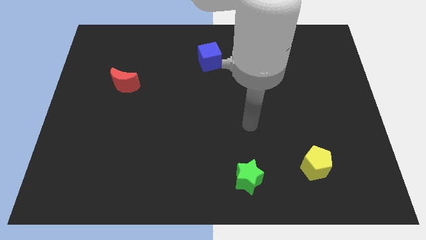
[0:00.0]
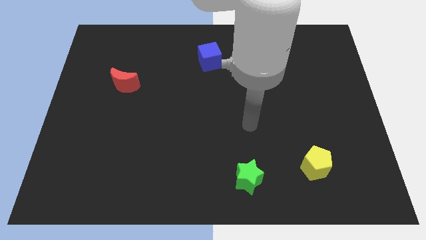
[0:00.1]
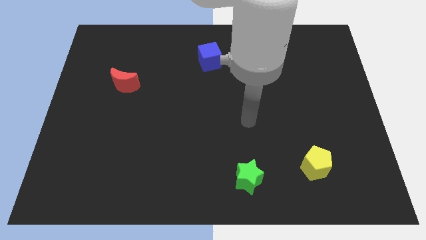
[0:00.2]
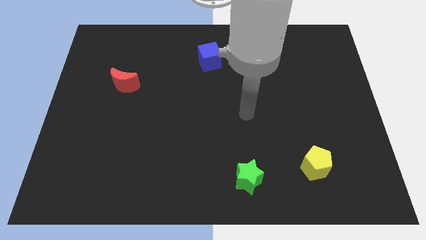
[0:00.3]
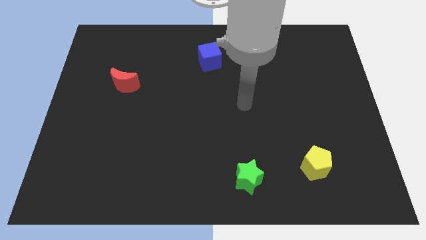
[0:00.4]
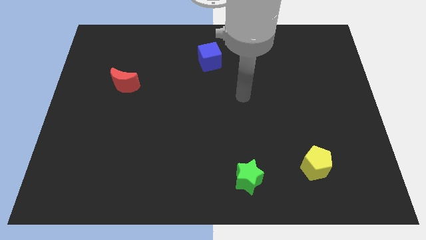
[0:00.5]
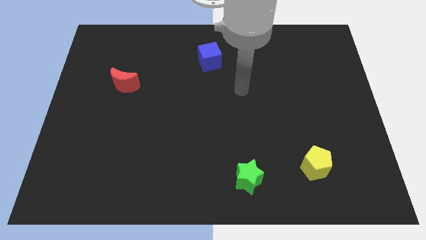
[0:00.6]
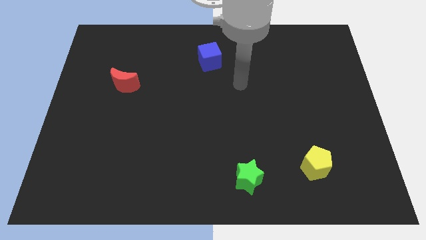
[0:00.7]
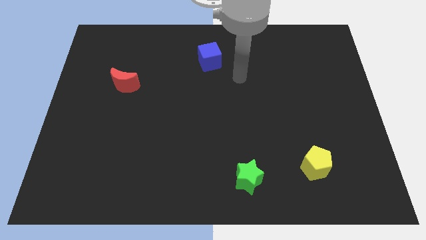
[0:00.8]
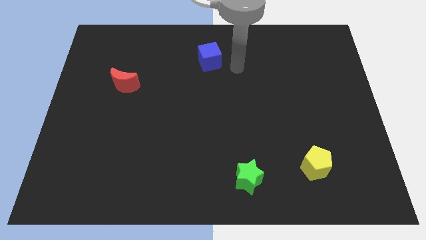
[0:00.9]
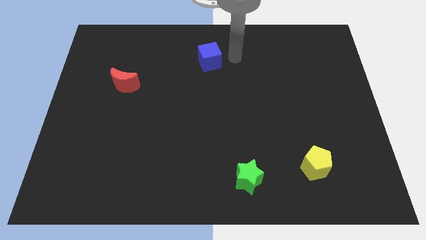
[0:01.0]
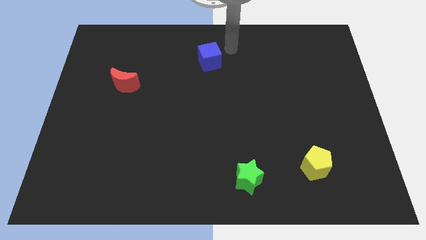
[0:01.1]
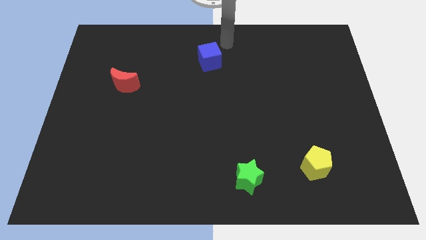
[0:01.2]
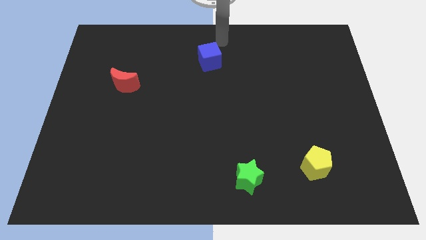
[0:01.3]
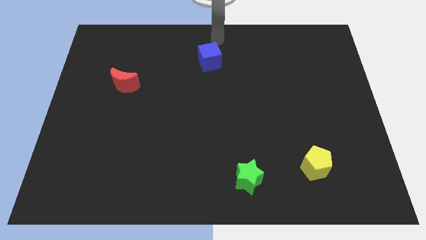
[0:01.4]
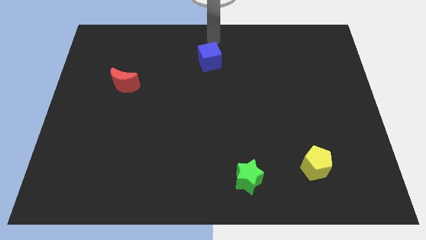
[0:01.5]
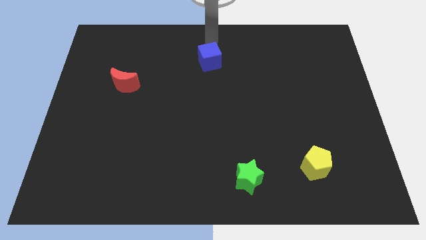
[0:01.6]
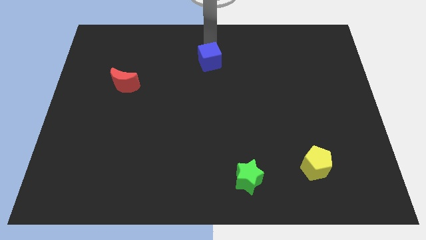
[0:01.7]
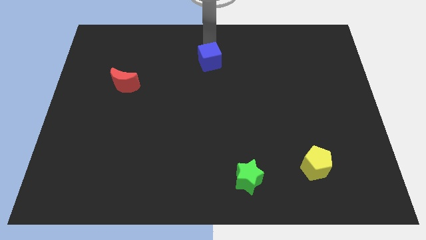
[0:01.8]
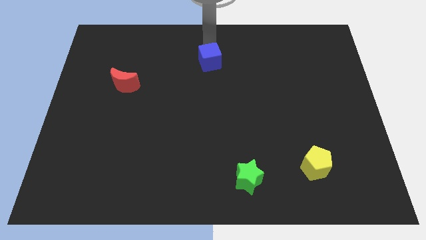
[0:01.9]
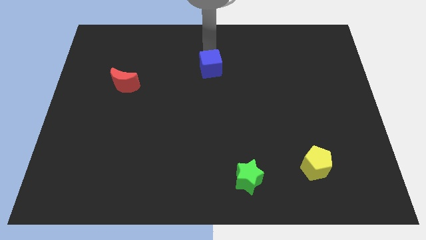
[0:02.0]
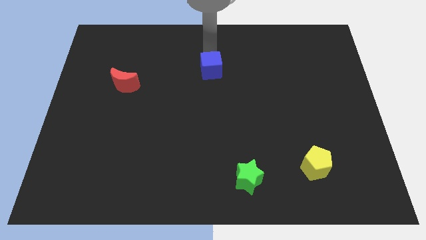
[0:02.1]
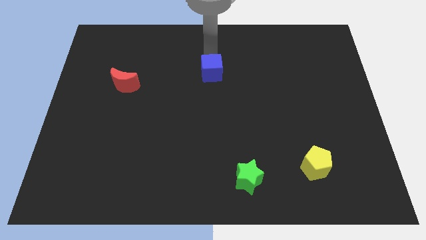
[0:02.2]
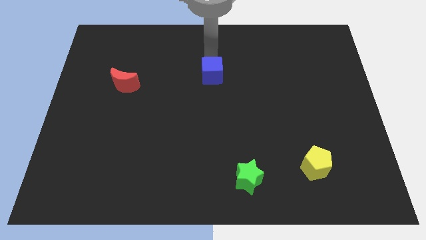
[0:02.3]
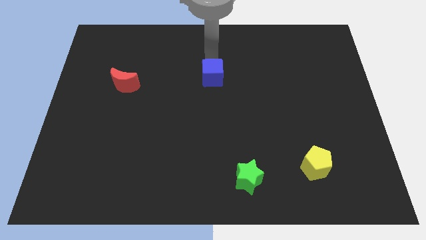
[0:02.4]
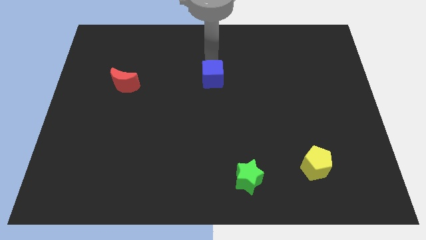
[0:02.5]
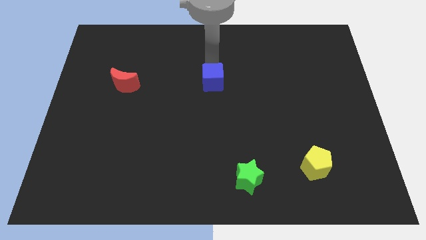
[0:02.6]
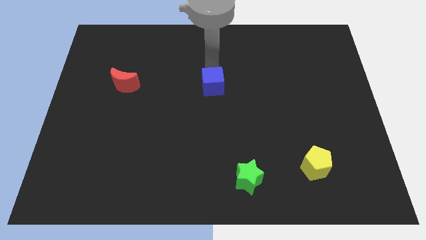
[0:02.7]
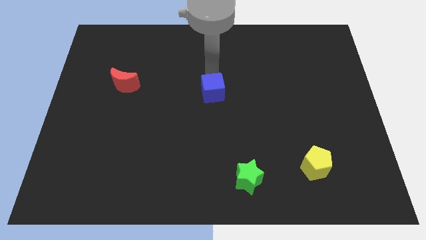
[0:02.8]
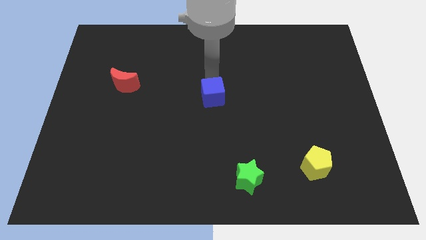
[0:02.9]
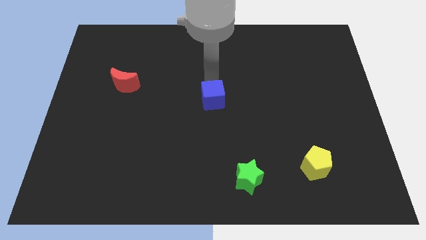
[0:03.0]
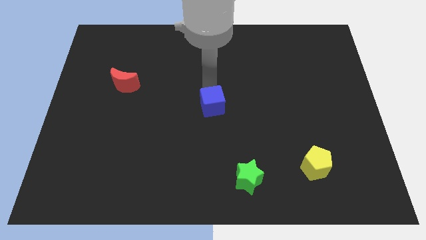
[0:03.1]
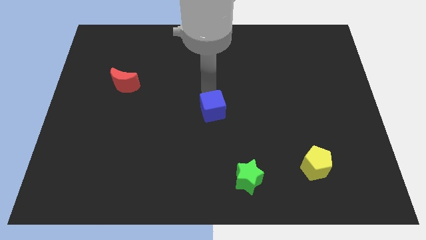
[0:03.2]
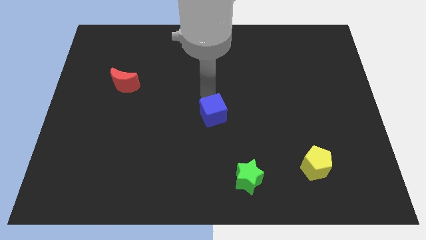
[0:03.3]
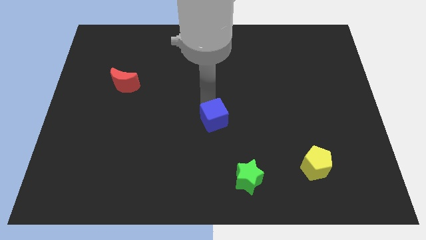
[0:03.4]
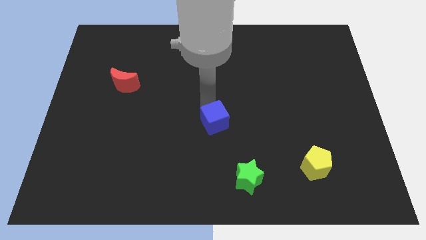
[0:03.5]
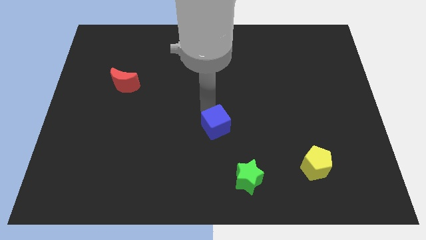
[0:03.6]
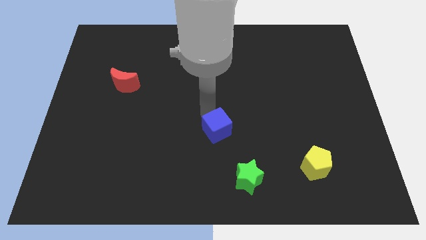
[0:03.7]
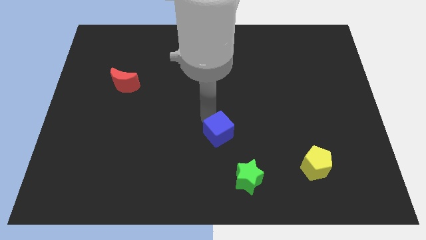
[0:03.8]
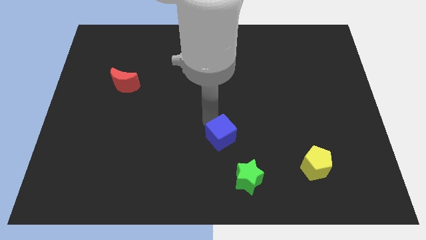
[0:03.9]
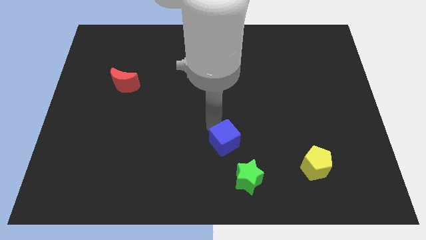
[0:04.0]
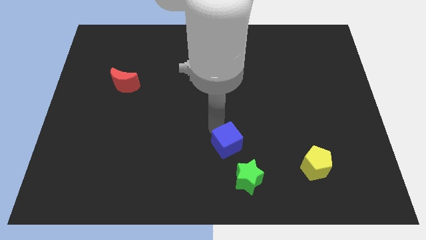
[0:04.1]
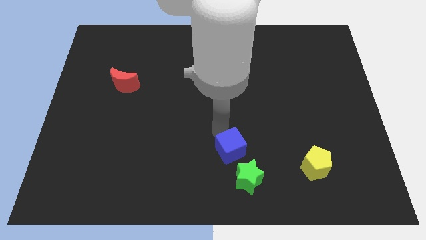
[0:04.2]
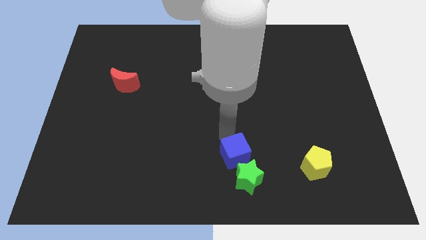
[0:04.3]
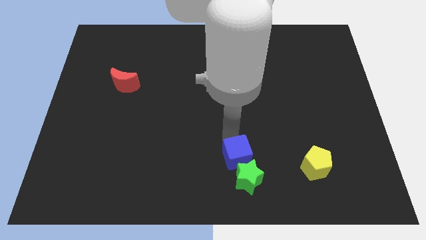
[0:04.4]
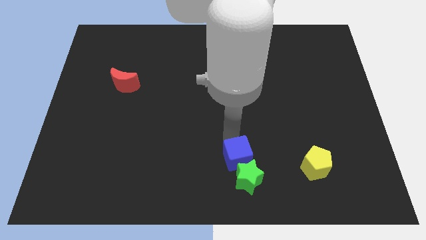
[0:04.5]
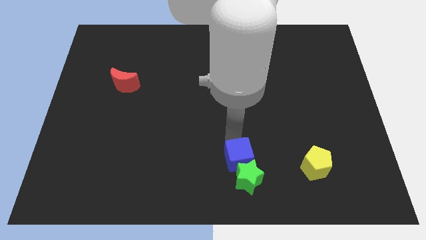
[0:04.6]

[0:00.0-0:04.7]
push the cube to the star

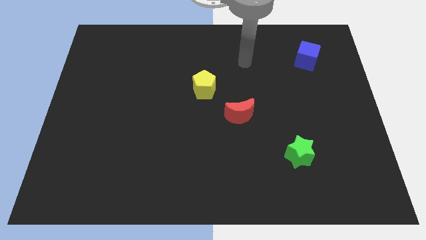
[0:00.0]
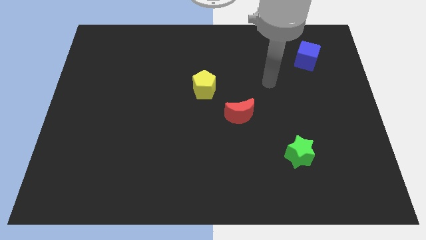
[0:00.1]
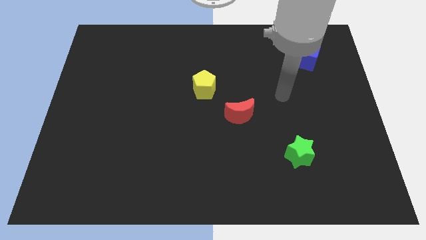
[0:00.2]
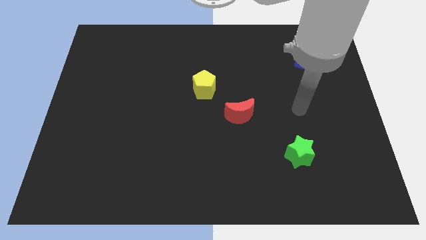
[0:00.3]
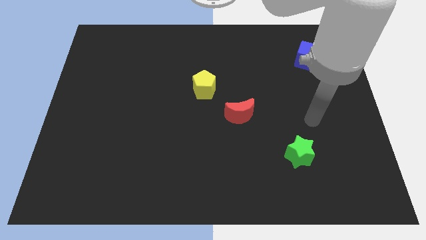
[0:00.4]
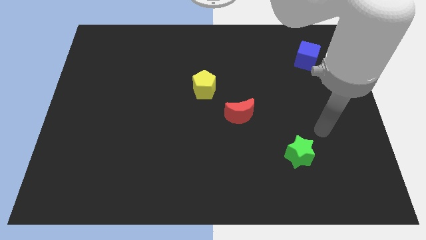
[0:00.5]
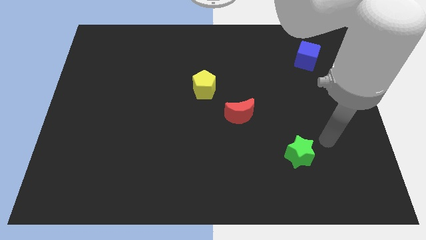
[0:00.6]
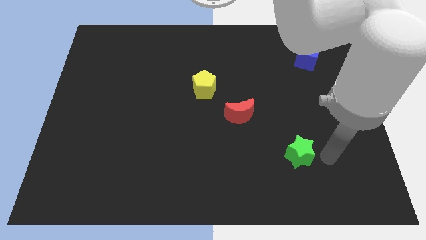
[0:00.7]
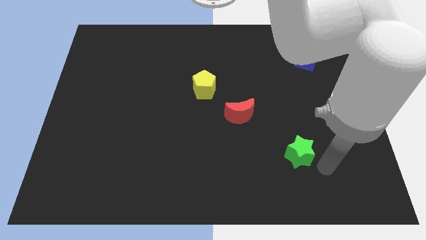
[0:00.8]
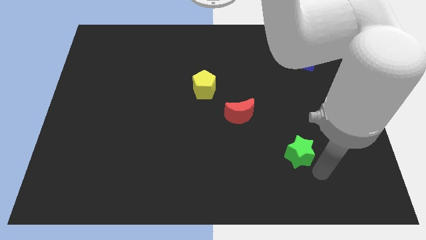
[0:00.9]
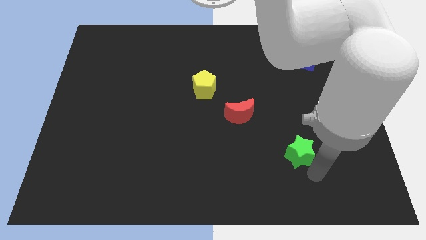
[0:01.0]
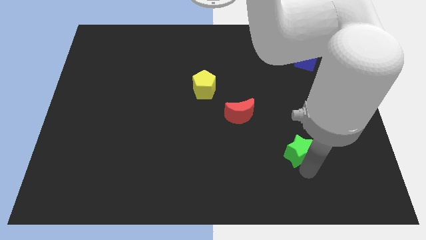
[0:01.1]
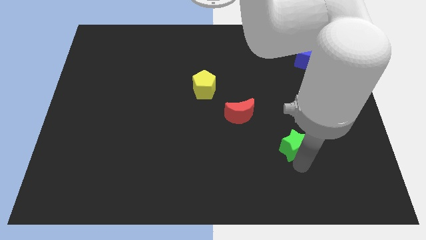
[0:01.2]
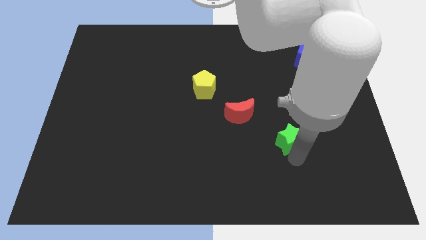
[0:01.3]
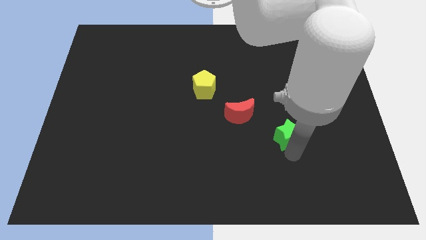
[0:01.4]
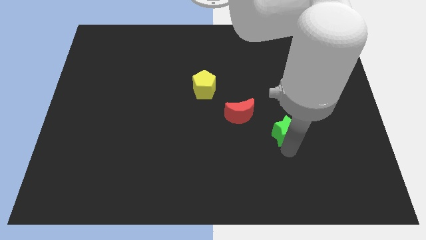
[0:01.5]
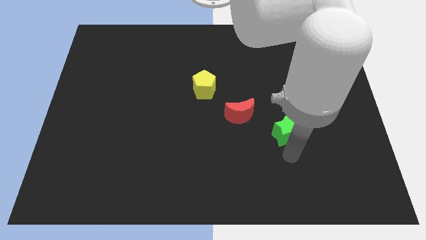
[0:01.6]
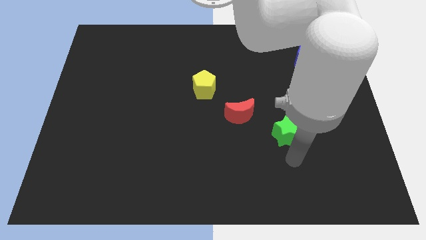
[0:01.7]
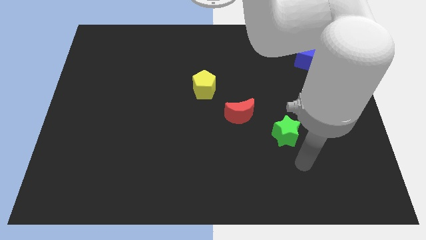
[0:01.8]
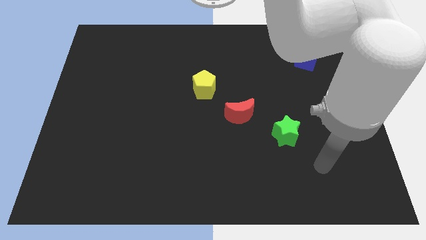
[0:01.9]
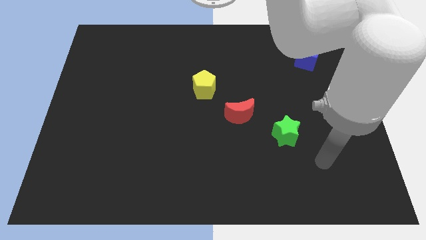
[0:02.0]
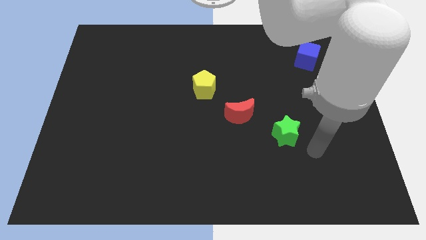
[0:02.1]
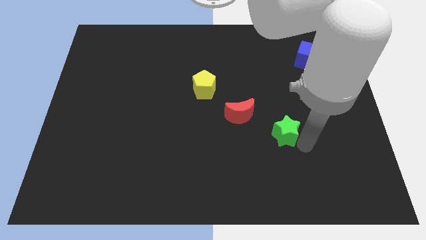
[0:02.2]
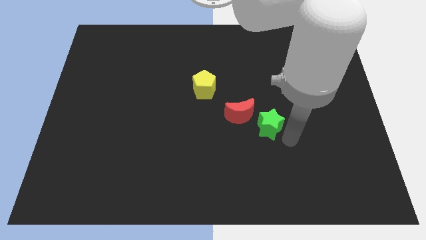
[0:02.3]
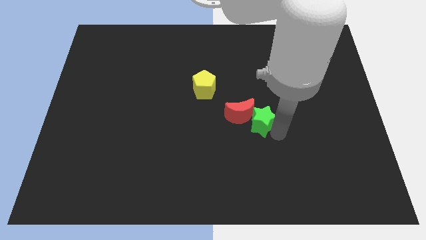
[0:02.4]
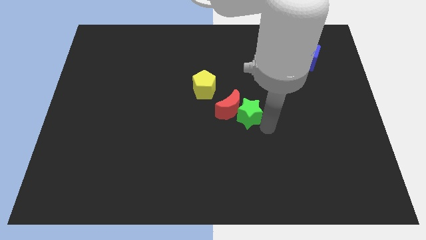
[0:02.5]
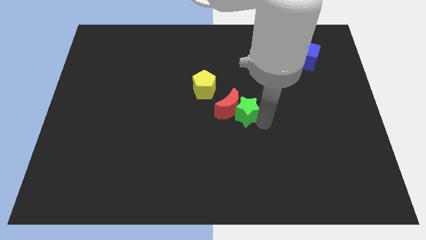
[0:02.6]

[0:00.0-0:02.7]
put the green block next to the red moon

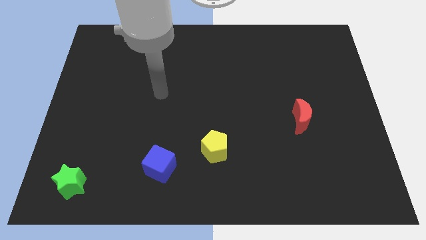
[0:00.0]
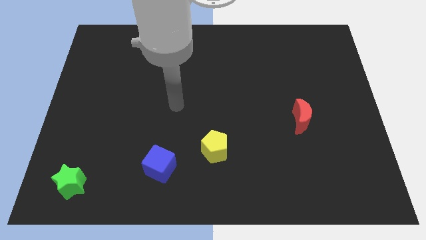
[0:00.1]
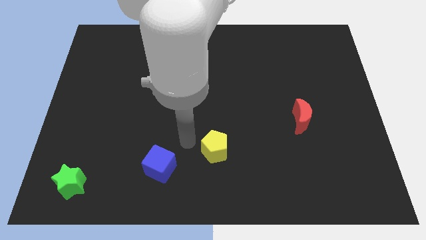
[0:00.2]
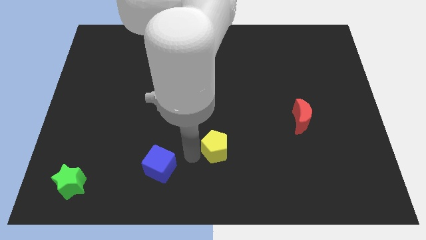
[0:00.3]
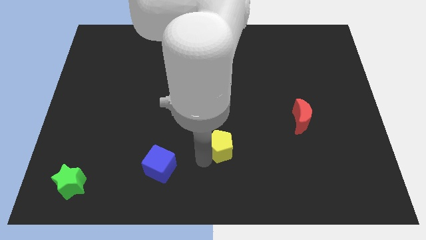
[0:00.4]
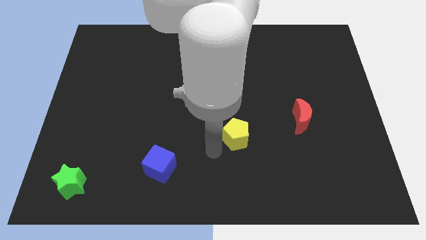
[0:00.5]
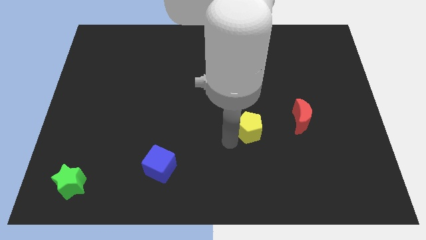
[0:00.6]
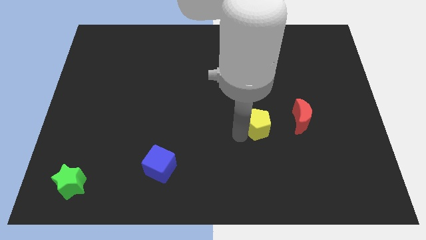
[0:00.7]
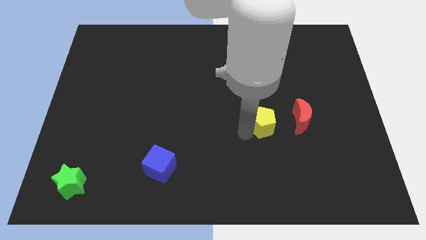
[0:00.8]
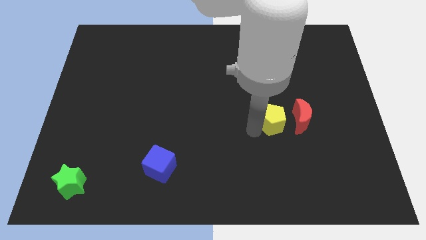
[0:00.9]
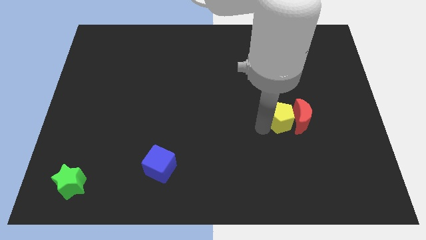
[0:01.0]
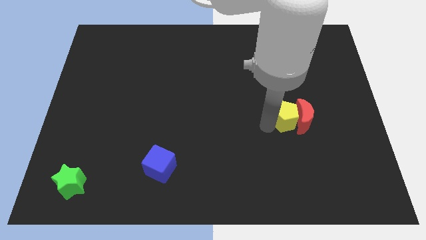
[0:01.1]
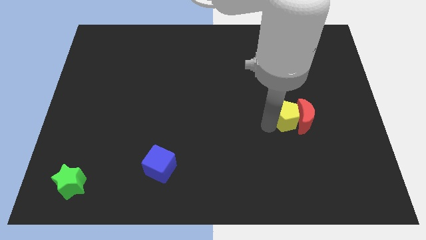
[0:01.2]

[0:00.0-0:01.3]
move the yellow block next to the moon

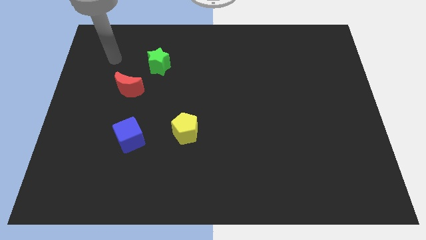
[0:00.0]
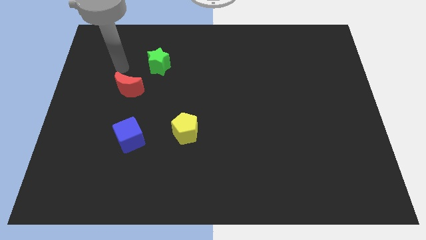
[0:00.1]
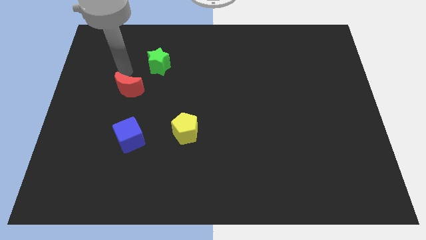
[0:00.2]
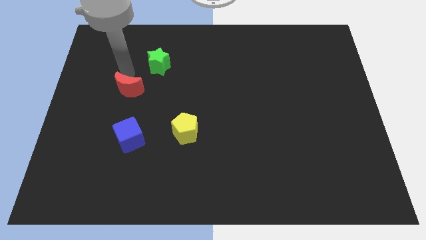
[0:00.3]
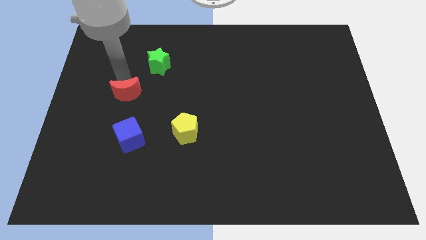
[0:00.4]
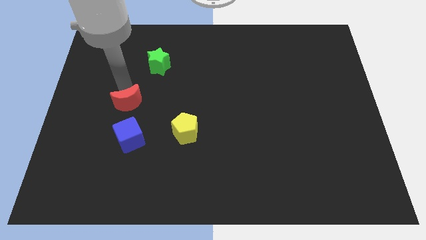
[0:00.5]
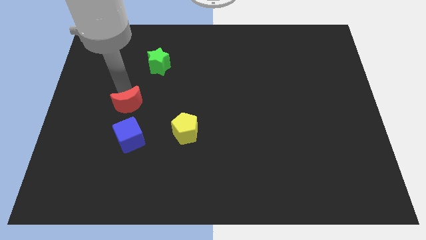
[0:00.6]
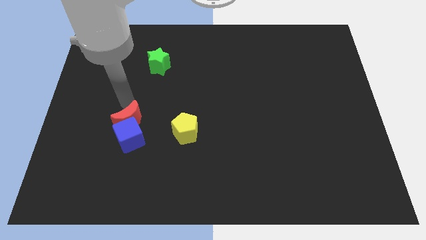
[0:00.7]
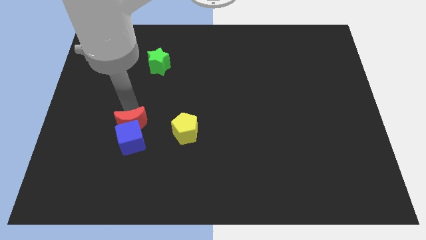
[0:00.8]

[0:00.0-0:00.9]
move the red moon close to the cube
